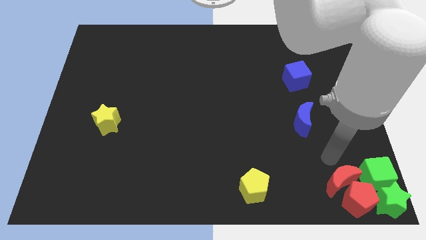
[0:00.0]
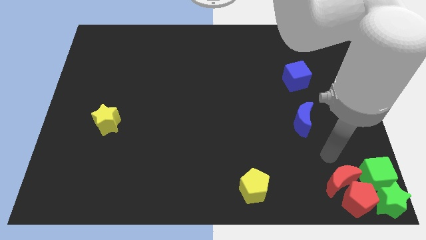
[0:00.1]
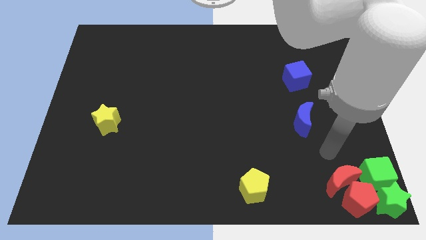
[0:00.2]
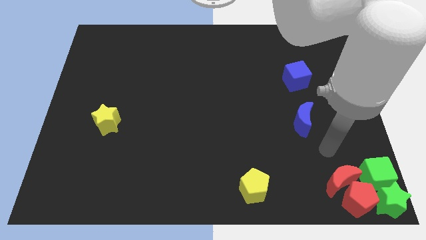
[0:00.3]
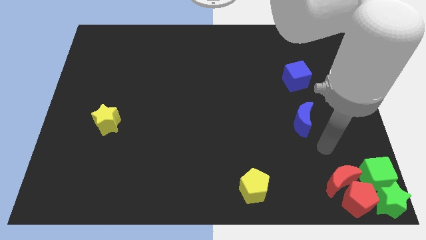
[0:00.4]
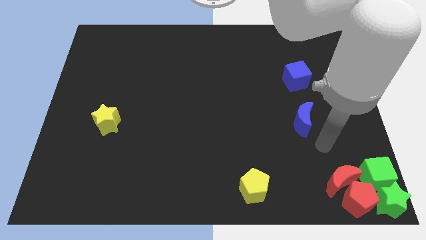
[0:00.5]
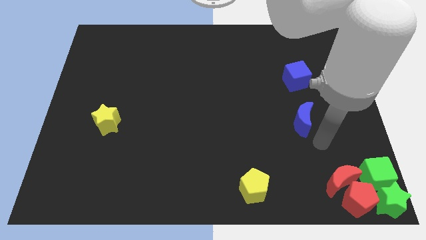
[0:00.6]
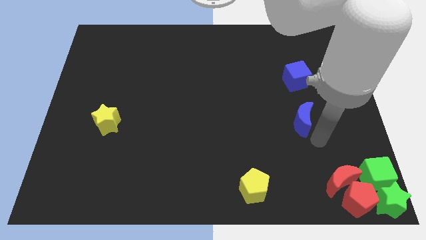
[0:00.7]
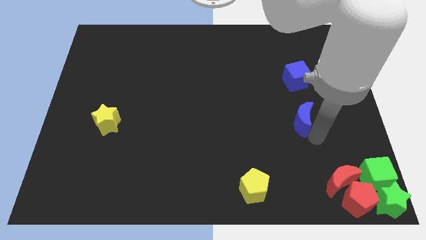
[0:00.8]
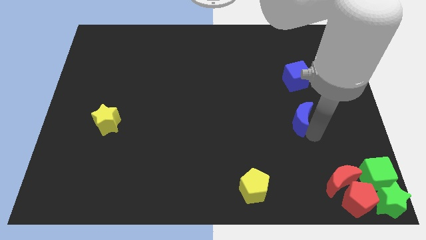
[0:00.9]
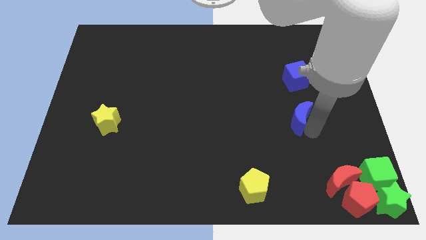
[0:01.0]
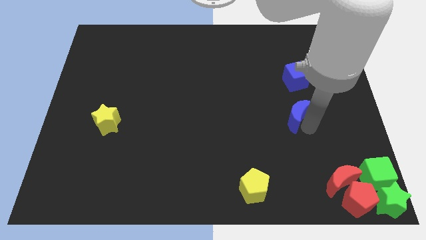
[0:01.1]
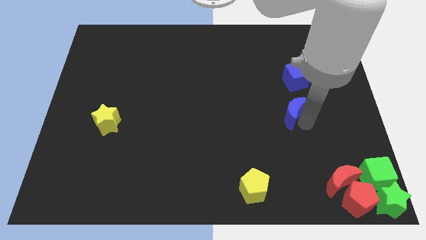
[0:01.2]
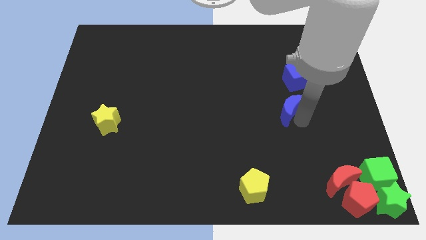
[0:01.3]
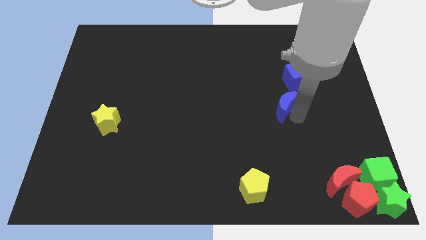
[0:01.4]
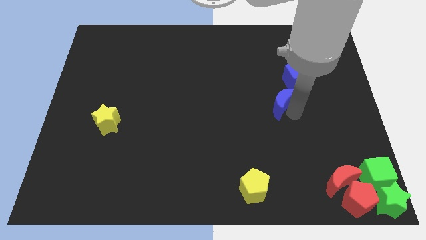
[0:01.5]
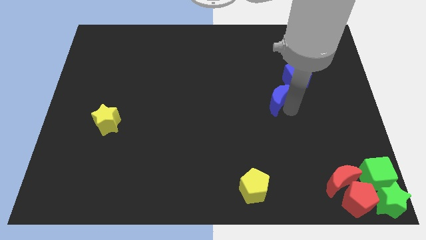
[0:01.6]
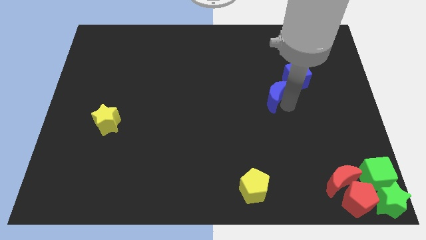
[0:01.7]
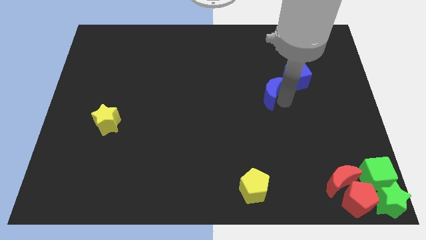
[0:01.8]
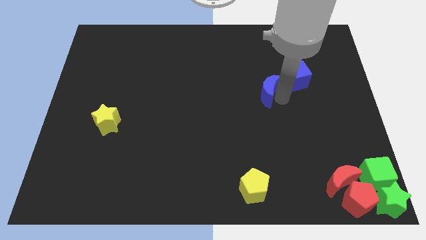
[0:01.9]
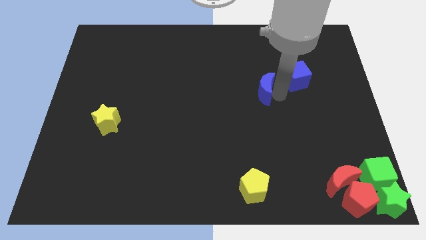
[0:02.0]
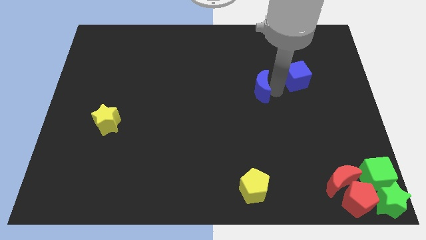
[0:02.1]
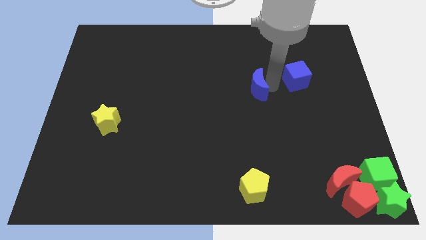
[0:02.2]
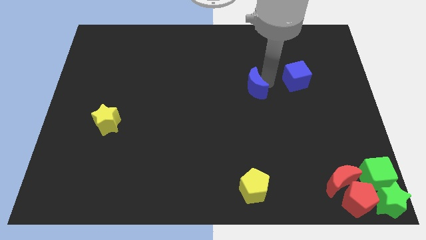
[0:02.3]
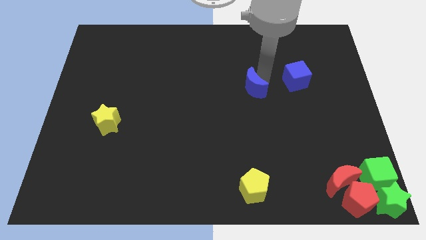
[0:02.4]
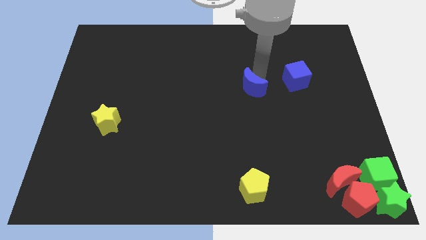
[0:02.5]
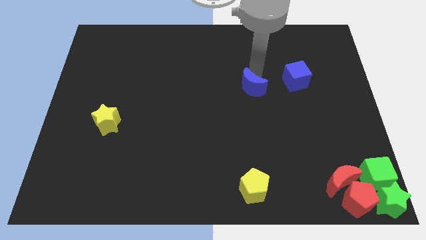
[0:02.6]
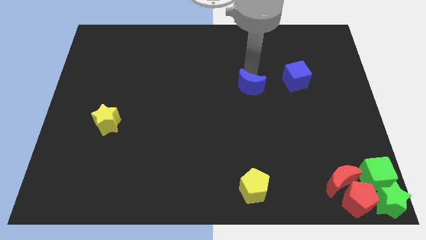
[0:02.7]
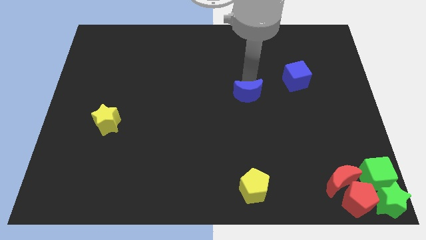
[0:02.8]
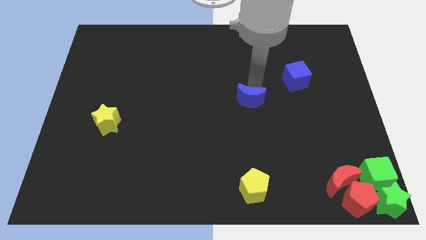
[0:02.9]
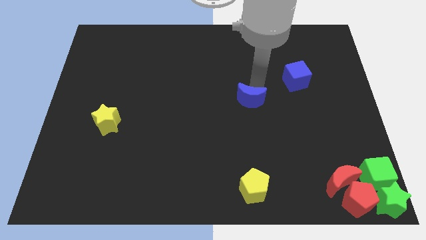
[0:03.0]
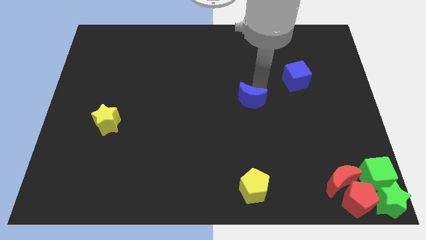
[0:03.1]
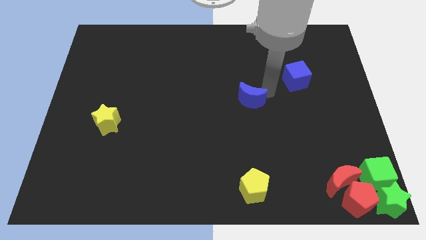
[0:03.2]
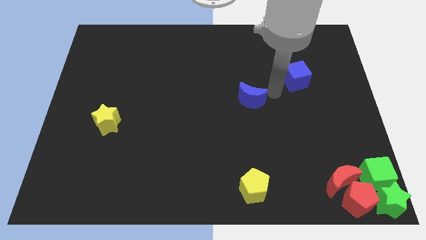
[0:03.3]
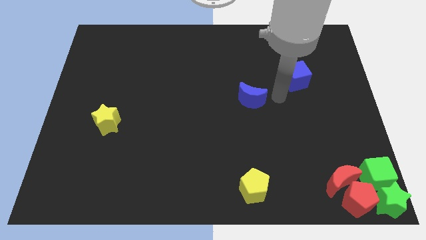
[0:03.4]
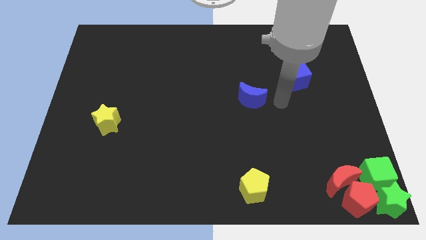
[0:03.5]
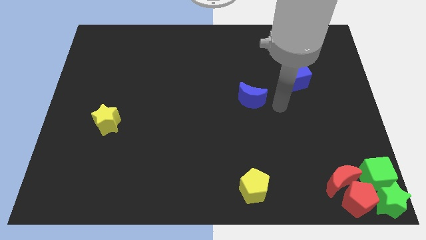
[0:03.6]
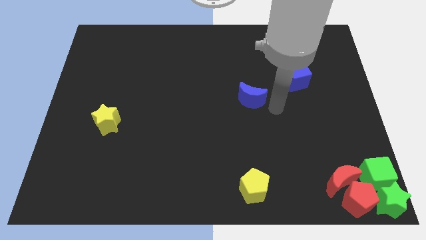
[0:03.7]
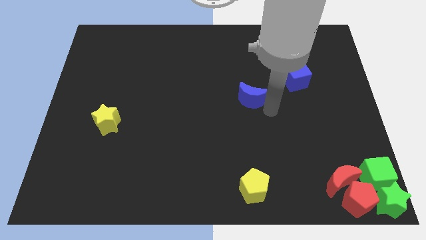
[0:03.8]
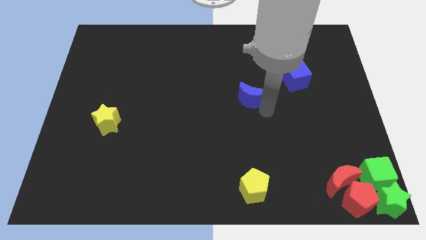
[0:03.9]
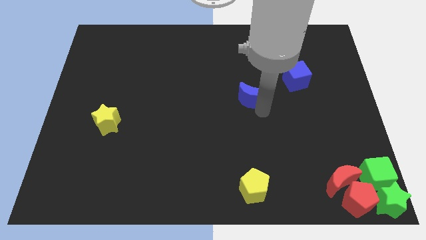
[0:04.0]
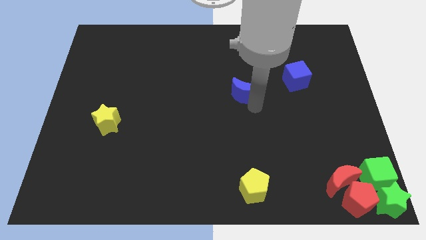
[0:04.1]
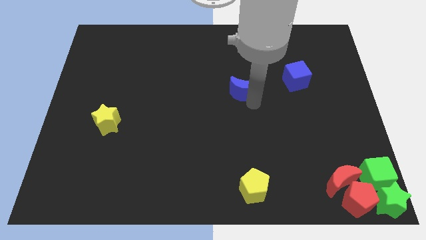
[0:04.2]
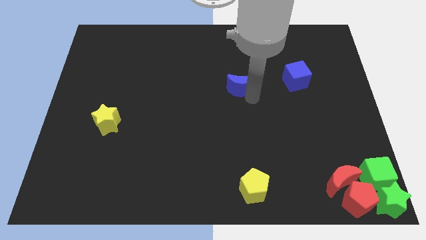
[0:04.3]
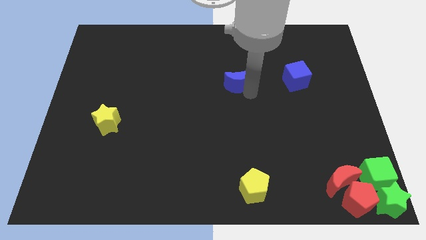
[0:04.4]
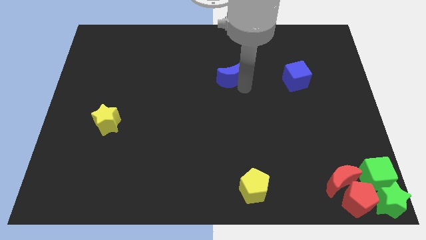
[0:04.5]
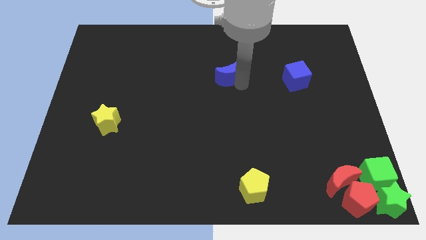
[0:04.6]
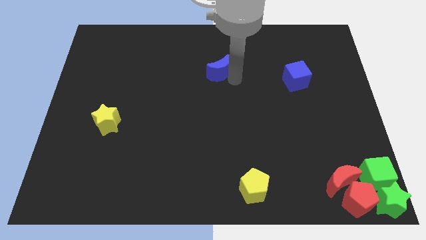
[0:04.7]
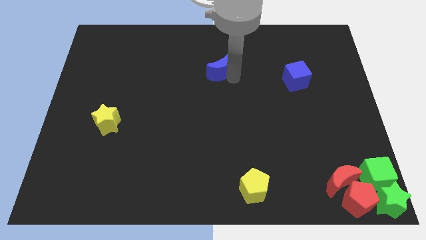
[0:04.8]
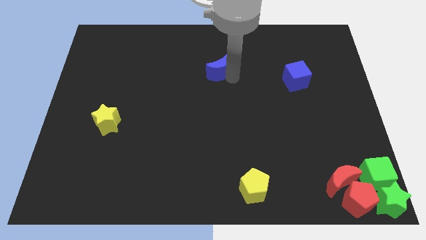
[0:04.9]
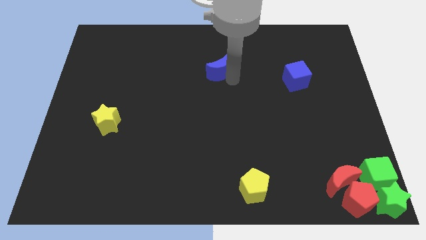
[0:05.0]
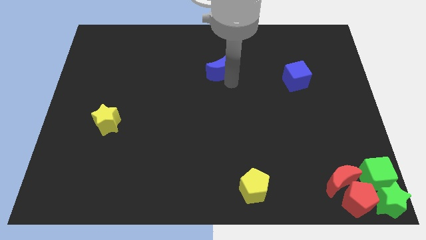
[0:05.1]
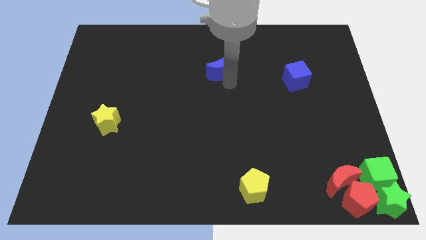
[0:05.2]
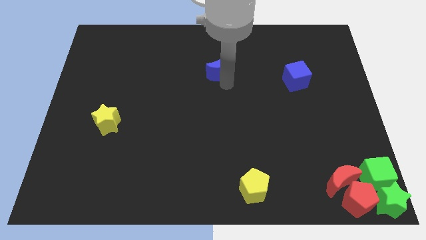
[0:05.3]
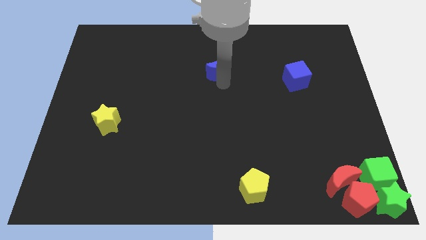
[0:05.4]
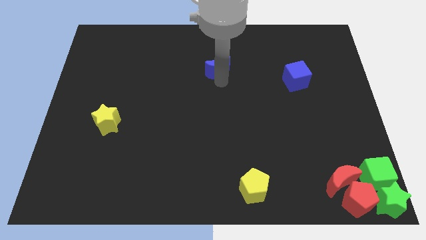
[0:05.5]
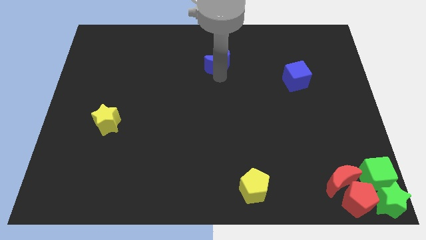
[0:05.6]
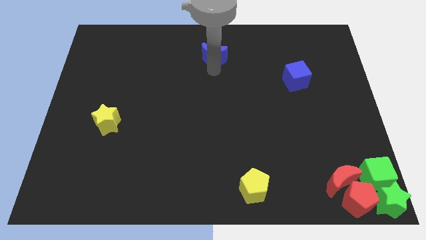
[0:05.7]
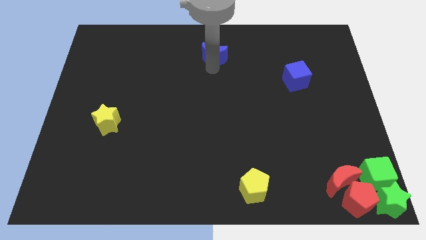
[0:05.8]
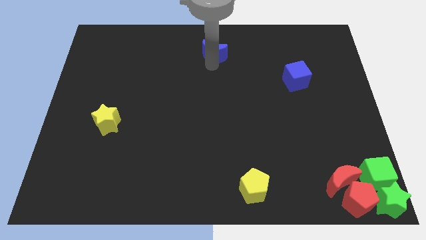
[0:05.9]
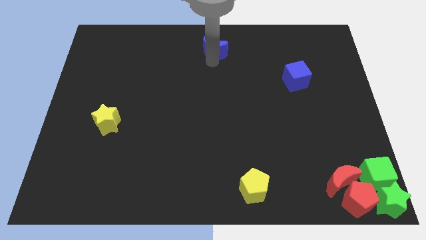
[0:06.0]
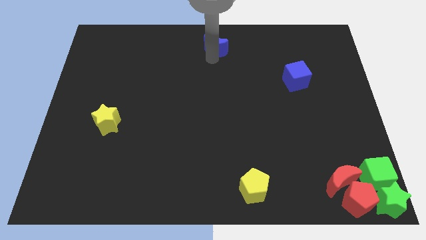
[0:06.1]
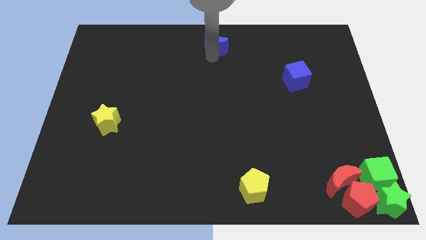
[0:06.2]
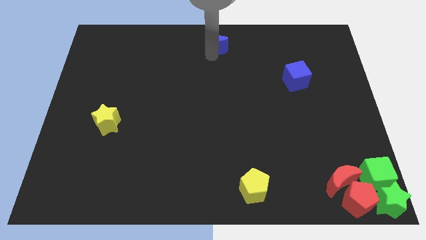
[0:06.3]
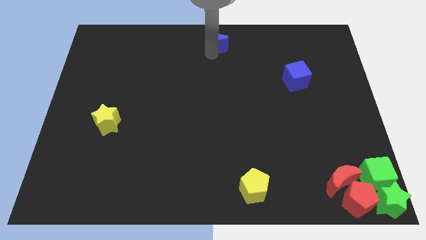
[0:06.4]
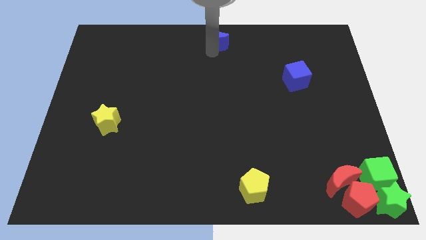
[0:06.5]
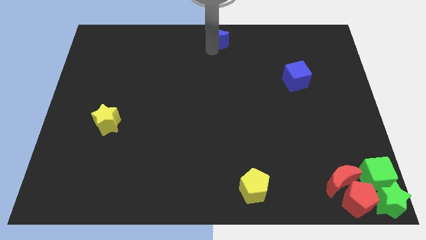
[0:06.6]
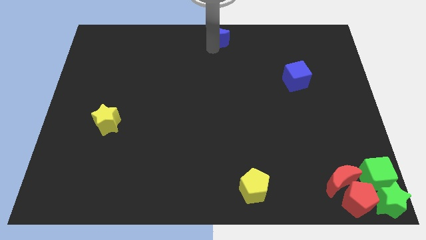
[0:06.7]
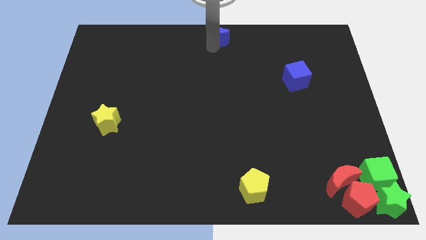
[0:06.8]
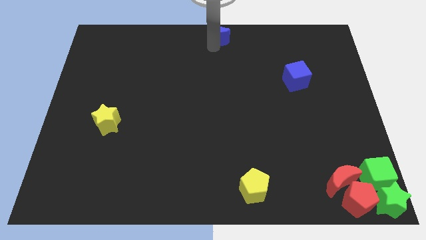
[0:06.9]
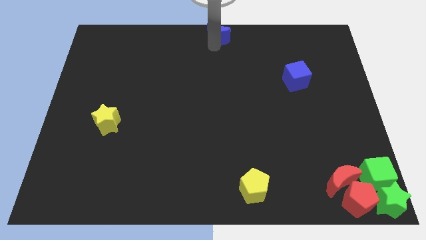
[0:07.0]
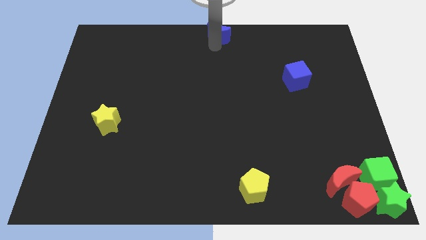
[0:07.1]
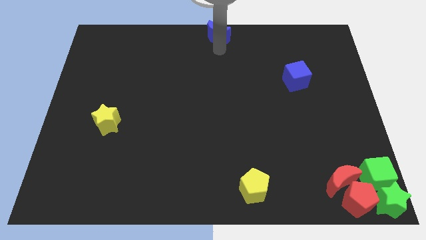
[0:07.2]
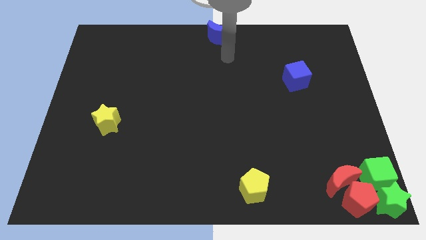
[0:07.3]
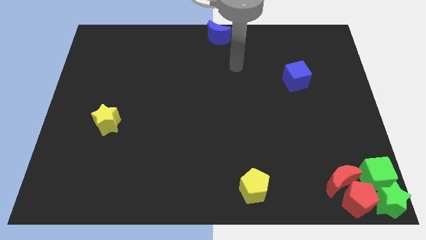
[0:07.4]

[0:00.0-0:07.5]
push the blue crescent to the top center of the board

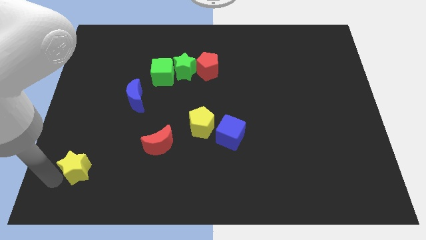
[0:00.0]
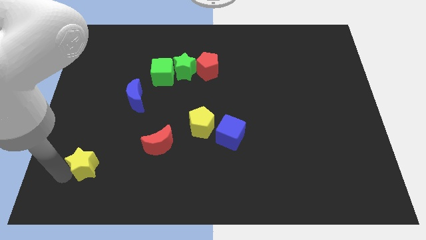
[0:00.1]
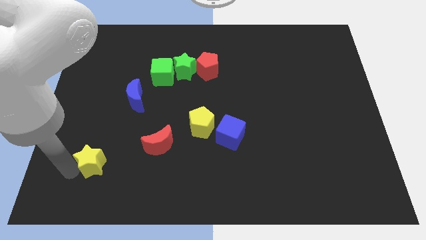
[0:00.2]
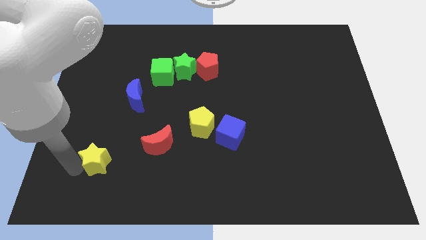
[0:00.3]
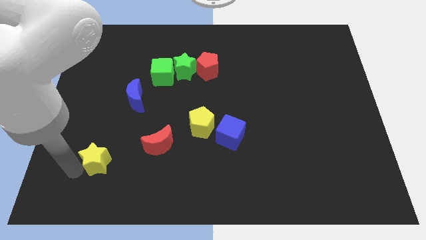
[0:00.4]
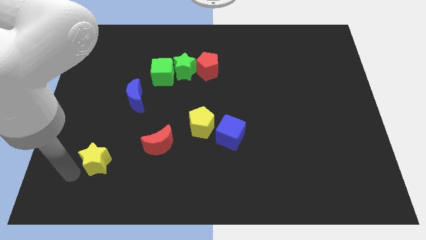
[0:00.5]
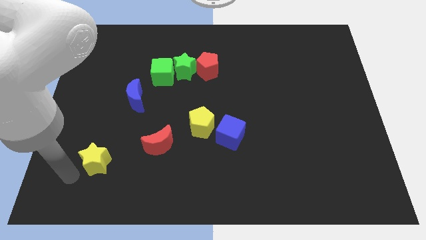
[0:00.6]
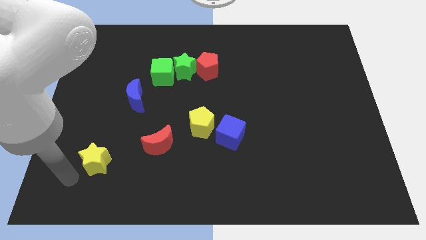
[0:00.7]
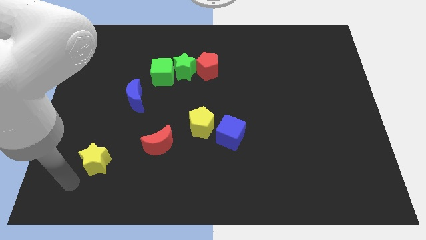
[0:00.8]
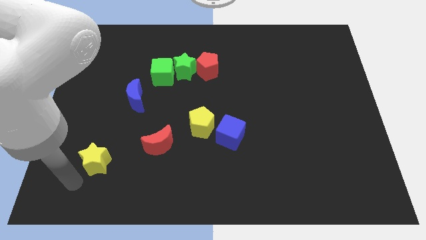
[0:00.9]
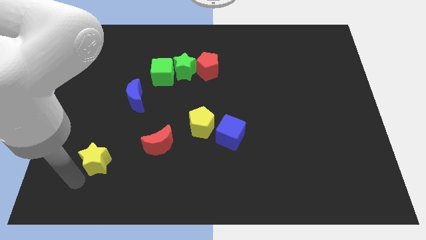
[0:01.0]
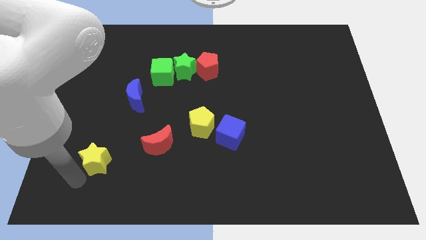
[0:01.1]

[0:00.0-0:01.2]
push the yellow star upwards

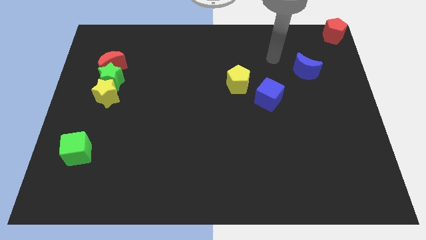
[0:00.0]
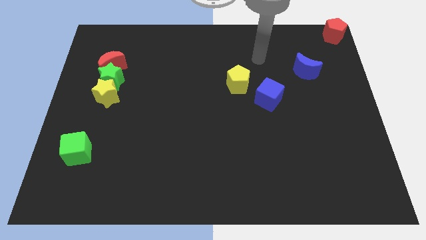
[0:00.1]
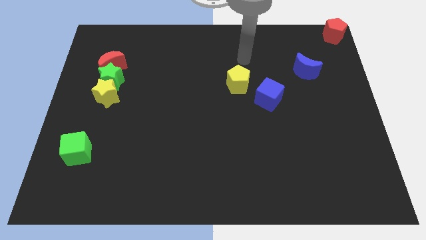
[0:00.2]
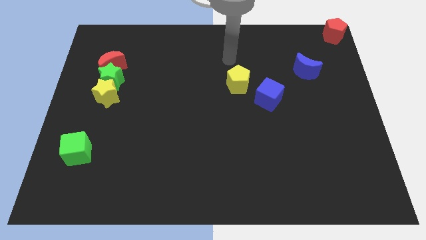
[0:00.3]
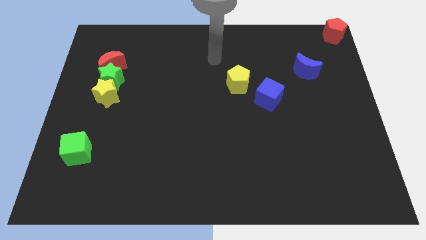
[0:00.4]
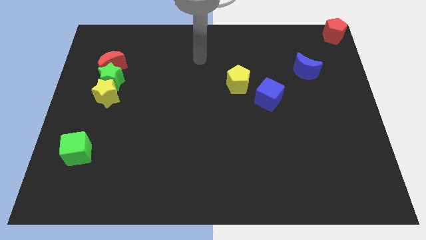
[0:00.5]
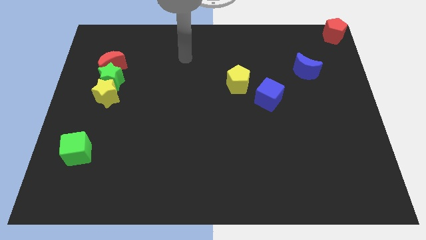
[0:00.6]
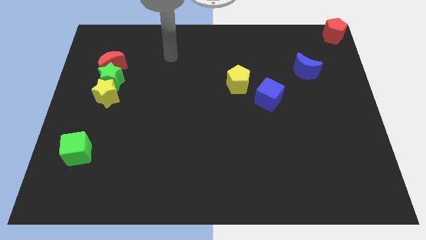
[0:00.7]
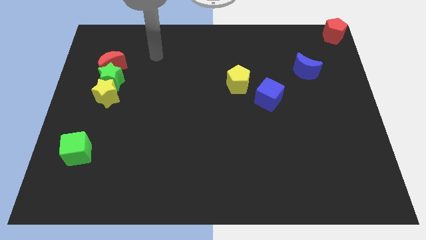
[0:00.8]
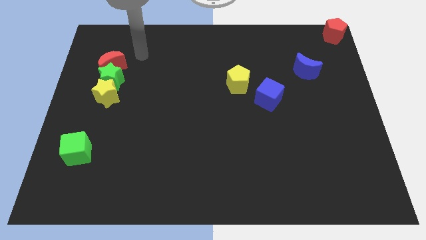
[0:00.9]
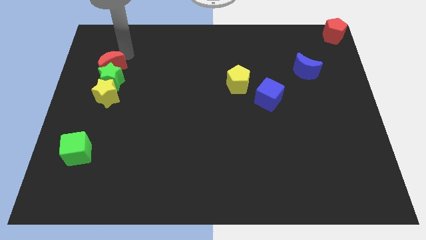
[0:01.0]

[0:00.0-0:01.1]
push the arm towards the red crescent
